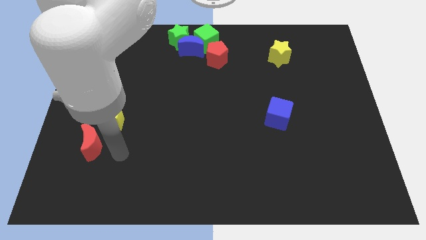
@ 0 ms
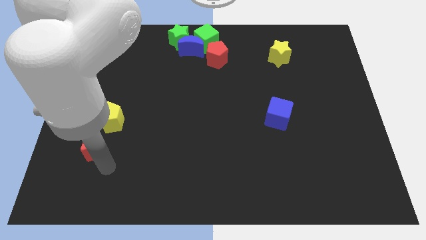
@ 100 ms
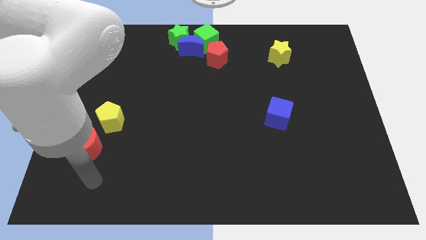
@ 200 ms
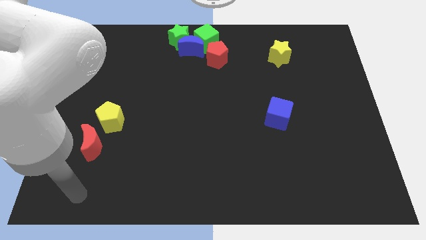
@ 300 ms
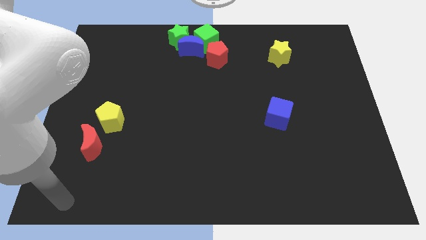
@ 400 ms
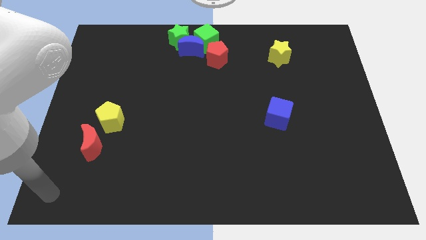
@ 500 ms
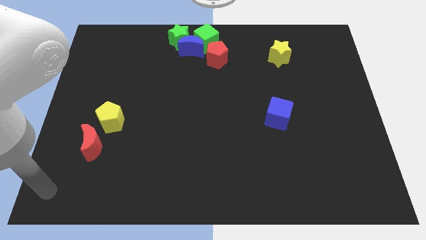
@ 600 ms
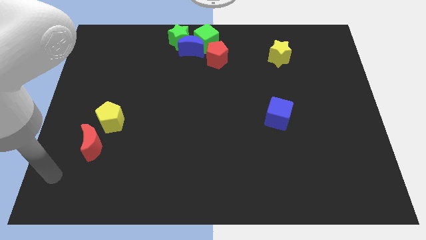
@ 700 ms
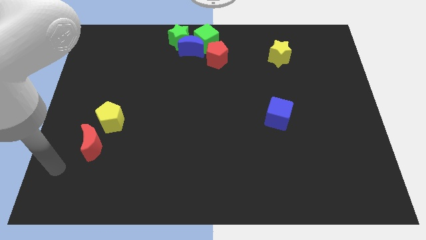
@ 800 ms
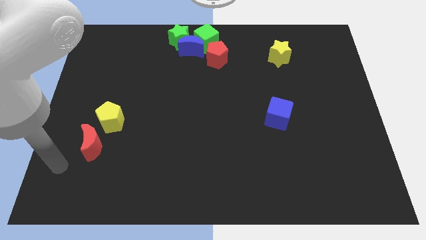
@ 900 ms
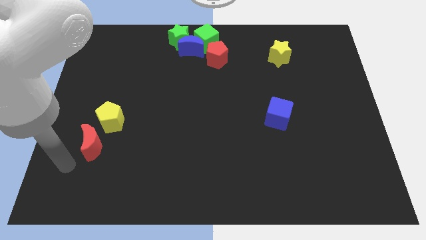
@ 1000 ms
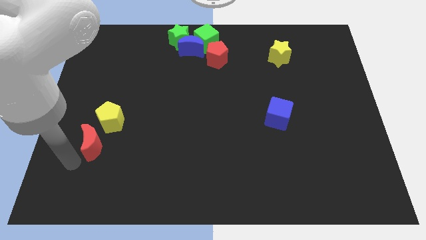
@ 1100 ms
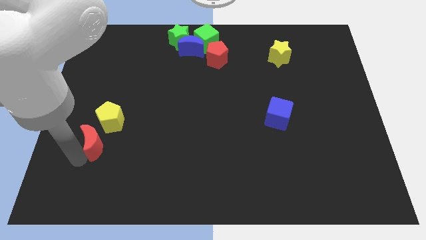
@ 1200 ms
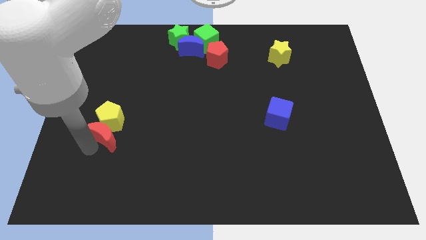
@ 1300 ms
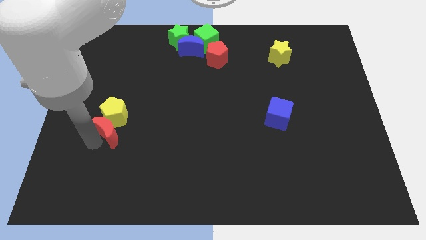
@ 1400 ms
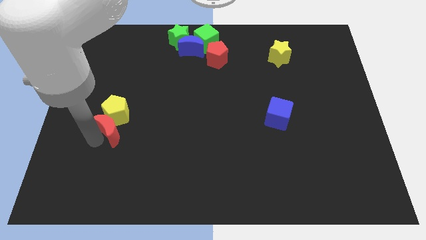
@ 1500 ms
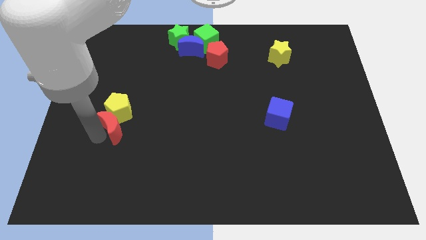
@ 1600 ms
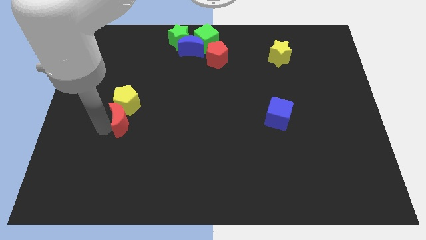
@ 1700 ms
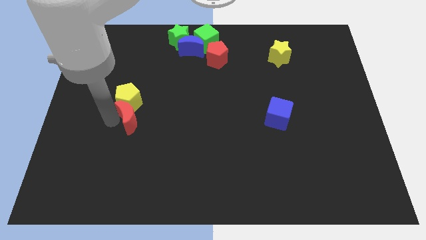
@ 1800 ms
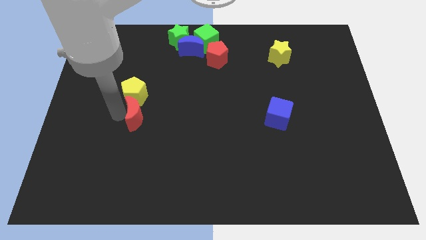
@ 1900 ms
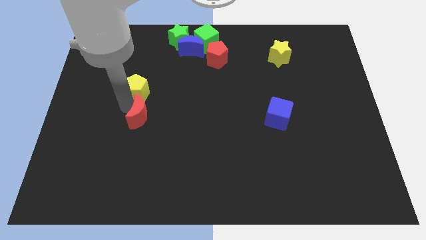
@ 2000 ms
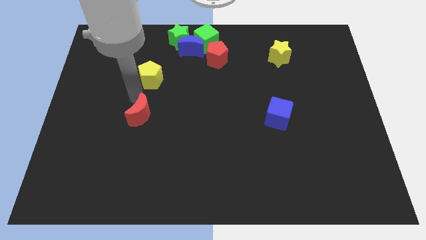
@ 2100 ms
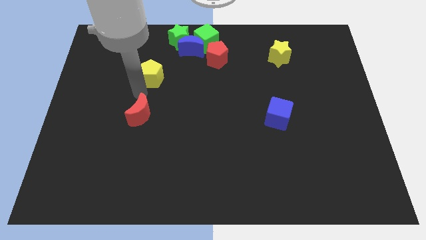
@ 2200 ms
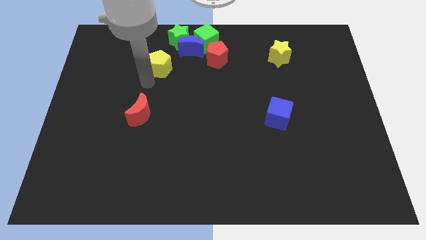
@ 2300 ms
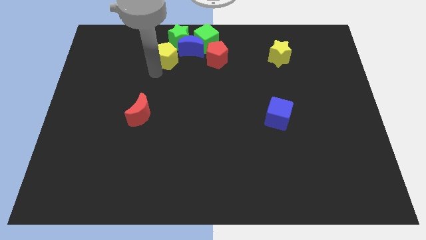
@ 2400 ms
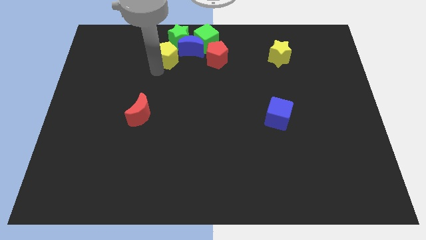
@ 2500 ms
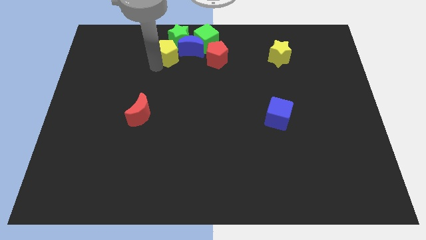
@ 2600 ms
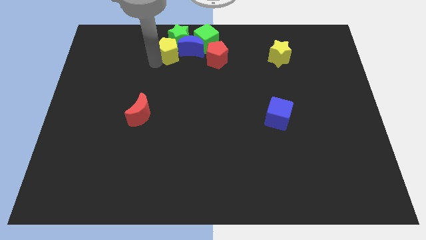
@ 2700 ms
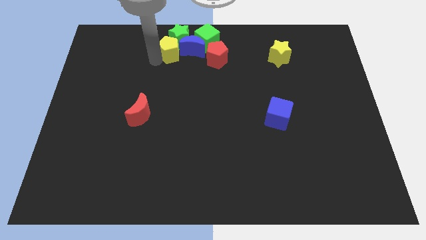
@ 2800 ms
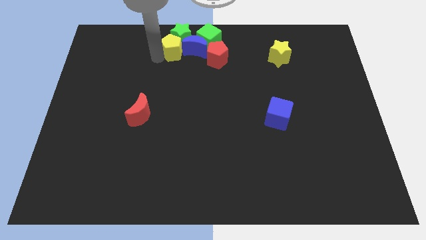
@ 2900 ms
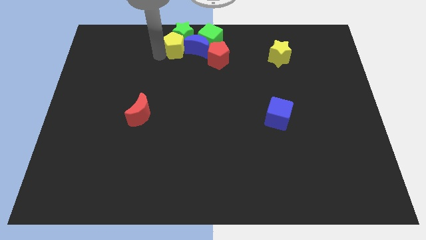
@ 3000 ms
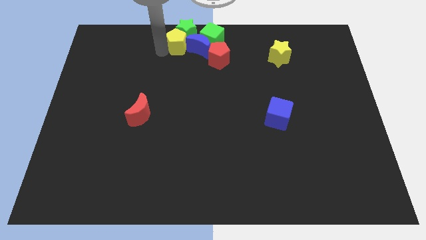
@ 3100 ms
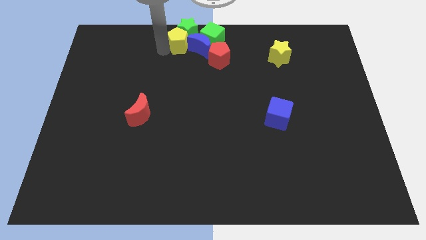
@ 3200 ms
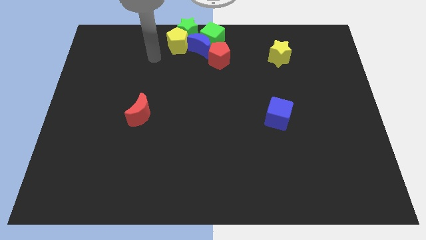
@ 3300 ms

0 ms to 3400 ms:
push the yellow pentagon into the green star

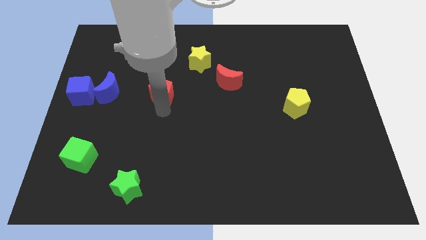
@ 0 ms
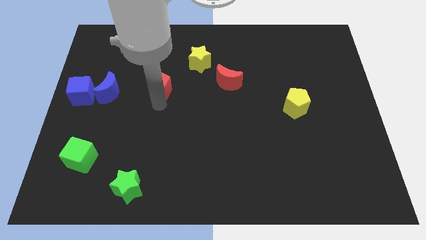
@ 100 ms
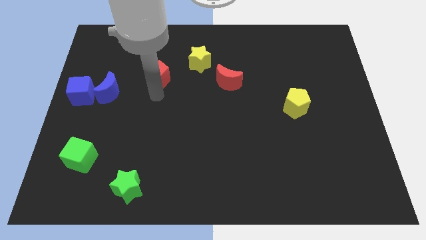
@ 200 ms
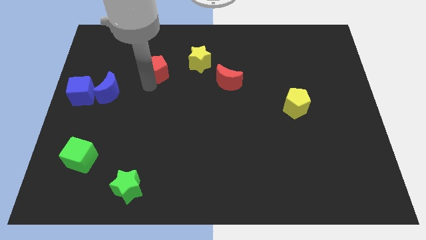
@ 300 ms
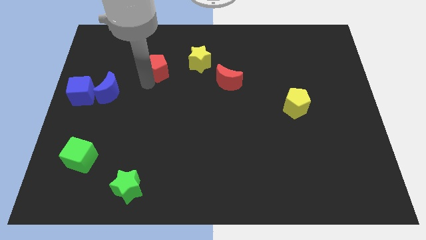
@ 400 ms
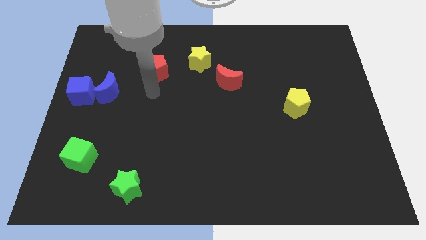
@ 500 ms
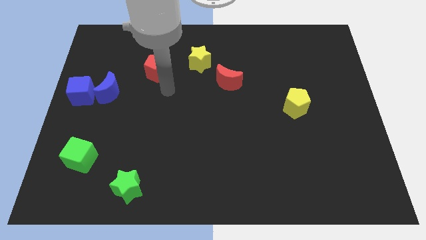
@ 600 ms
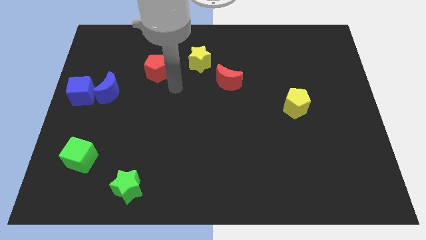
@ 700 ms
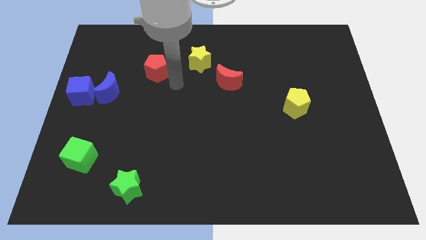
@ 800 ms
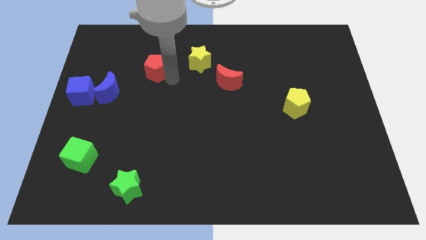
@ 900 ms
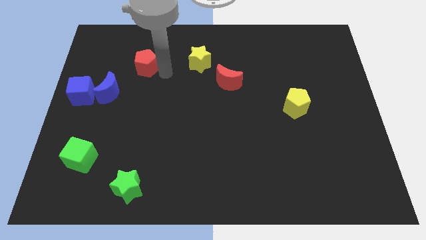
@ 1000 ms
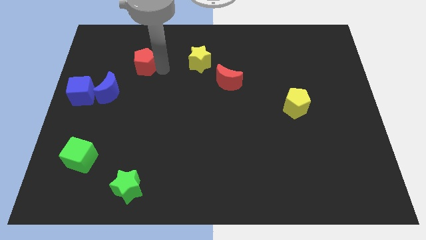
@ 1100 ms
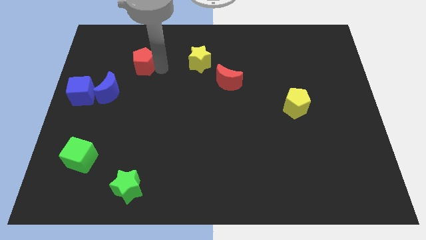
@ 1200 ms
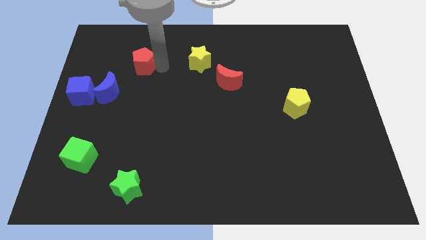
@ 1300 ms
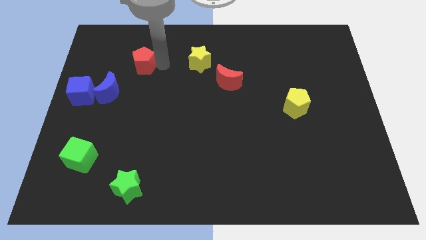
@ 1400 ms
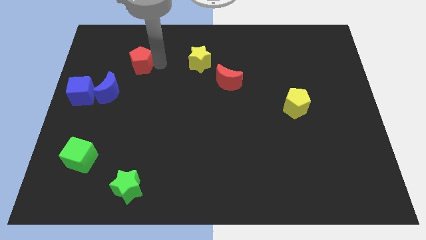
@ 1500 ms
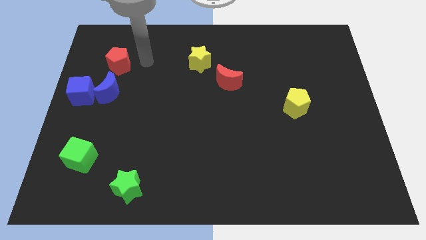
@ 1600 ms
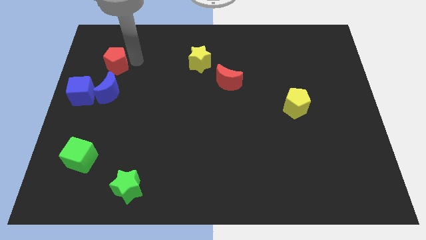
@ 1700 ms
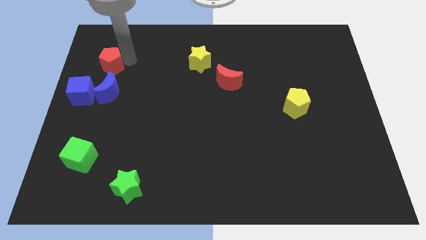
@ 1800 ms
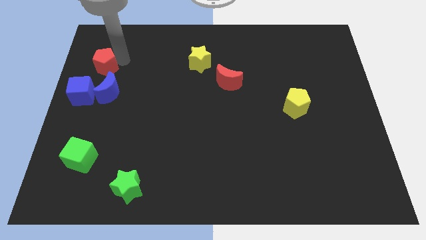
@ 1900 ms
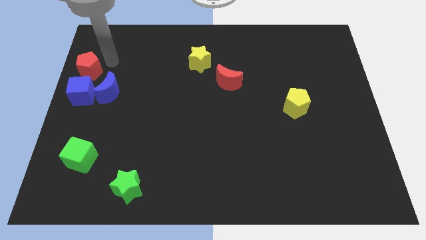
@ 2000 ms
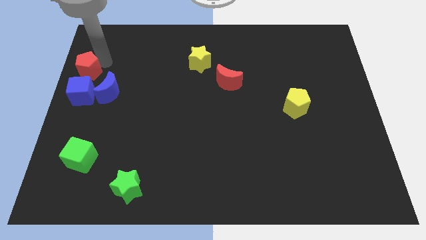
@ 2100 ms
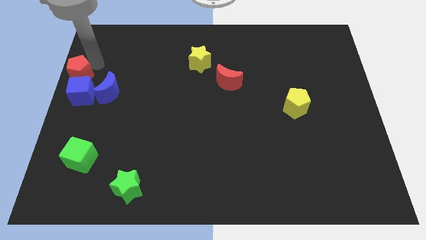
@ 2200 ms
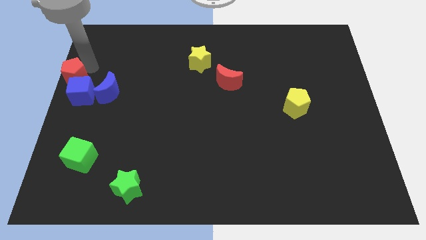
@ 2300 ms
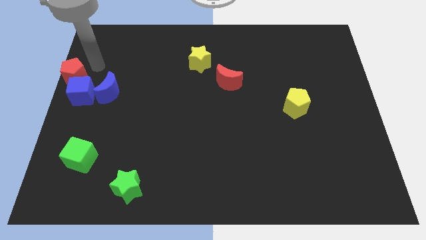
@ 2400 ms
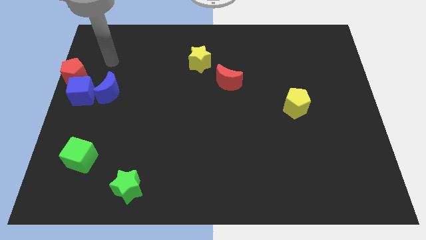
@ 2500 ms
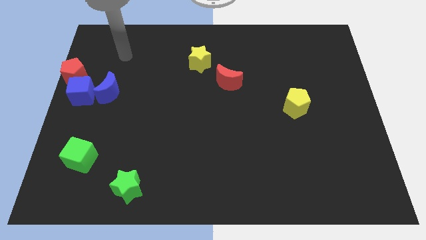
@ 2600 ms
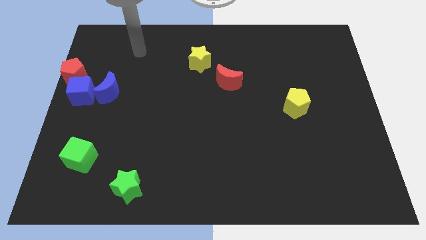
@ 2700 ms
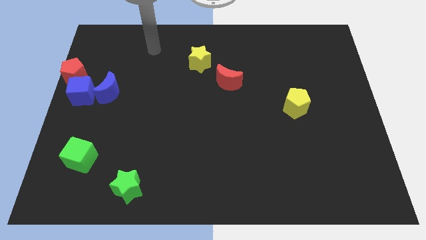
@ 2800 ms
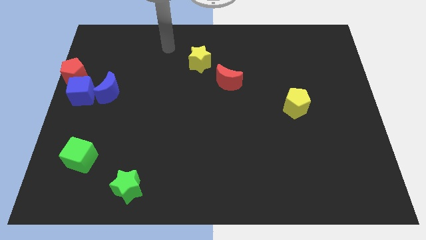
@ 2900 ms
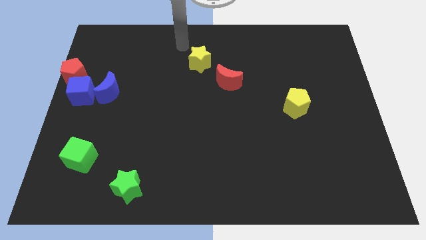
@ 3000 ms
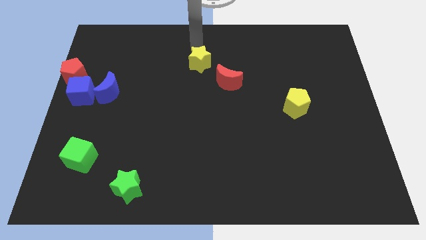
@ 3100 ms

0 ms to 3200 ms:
put the red pentagon at the top of blue cube

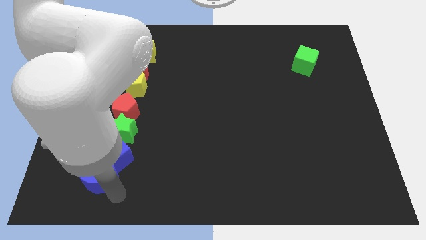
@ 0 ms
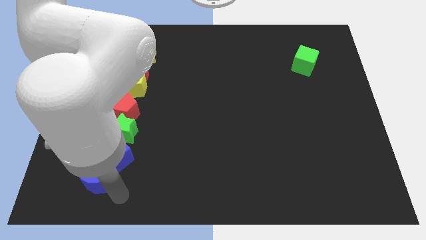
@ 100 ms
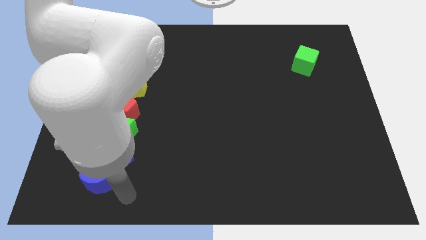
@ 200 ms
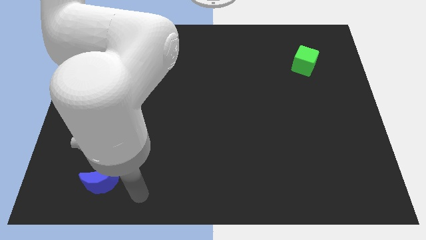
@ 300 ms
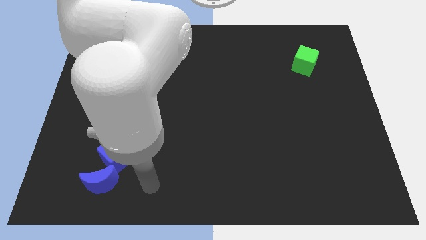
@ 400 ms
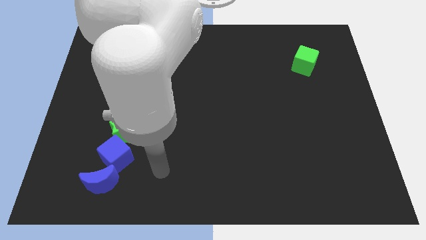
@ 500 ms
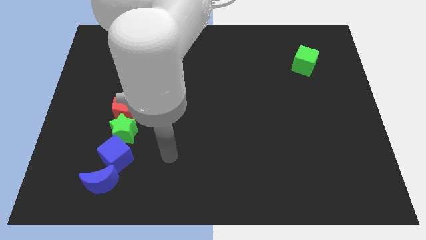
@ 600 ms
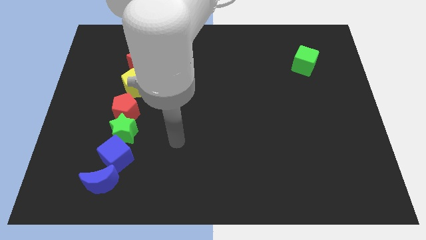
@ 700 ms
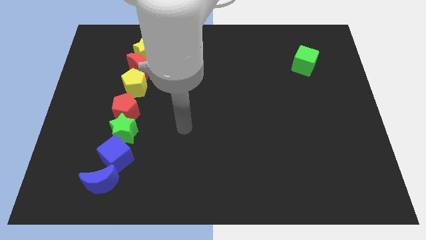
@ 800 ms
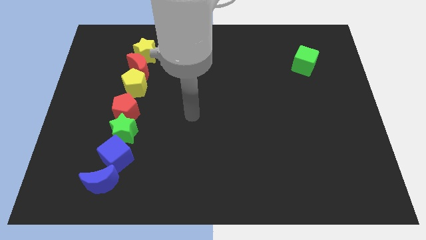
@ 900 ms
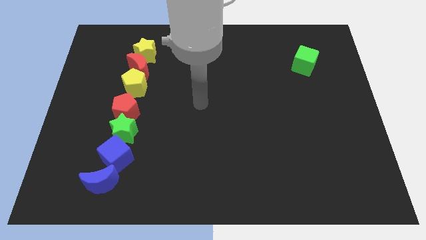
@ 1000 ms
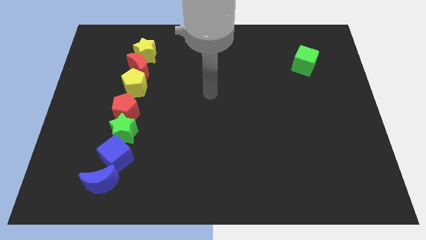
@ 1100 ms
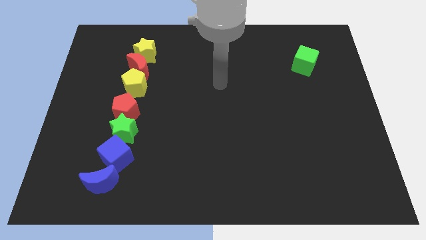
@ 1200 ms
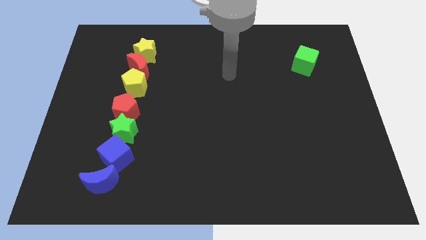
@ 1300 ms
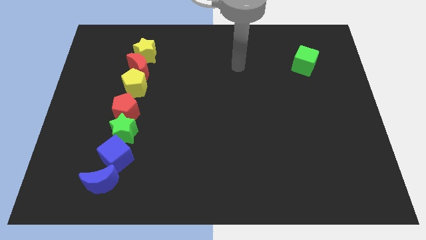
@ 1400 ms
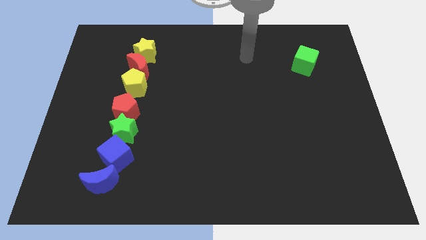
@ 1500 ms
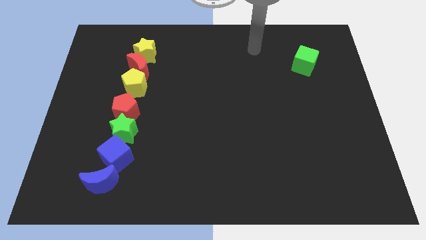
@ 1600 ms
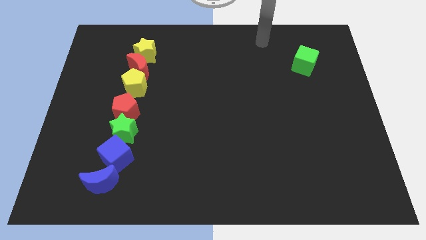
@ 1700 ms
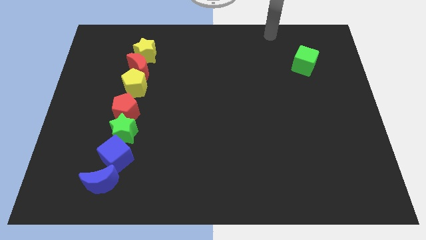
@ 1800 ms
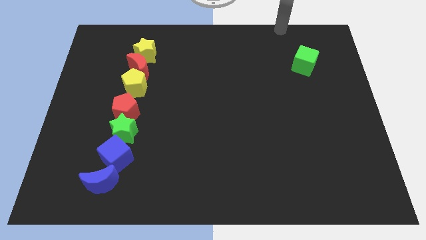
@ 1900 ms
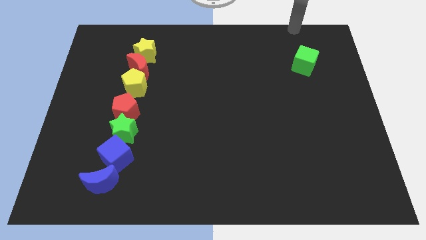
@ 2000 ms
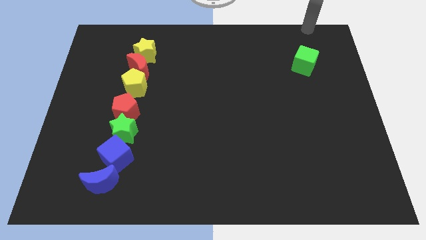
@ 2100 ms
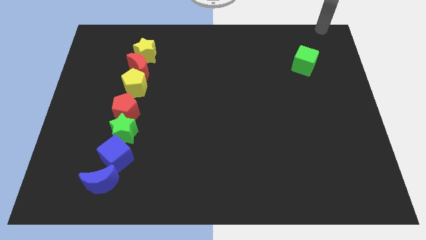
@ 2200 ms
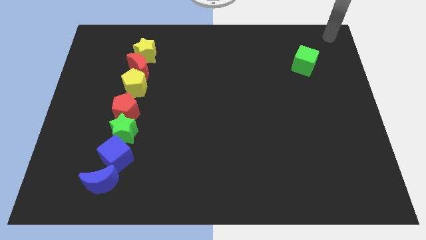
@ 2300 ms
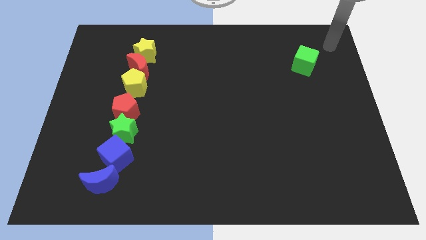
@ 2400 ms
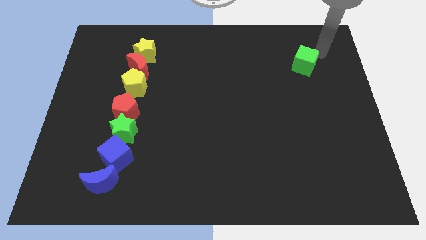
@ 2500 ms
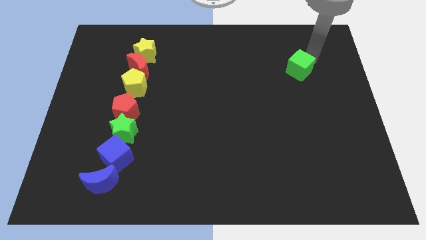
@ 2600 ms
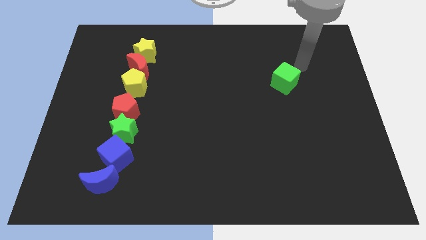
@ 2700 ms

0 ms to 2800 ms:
move the green cube to the right of the yellow pentagon
